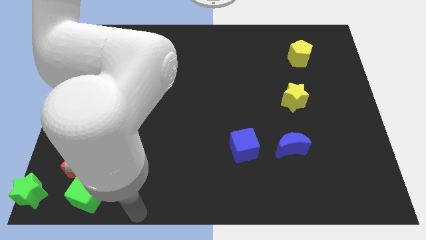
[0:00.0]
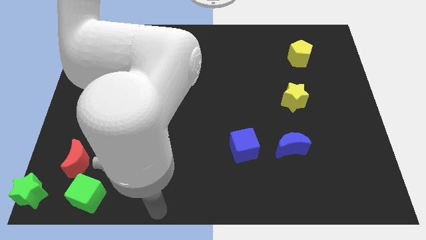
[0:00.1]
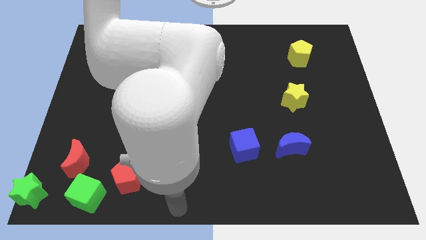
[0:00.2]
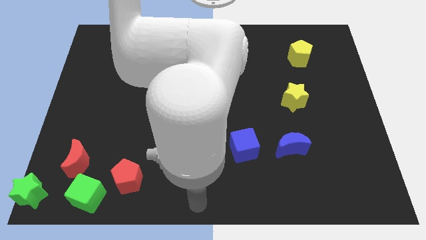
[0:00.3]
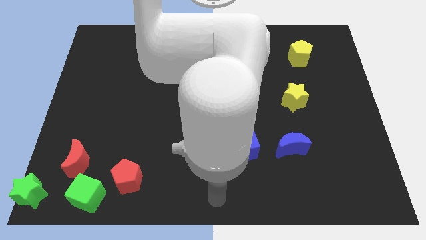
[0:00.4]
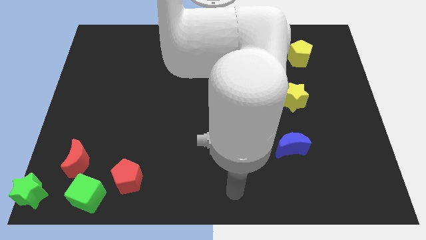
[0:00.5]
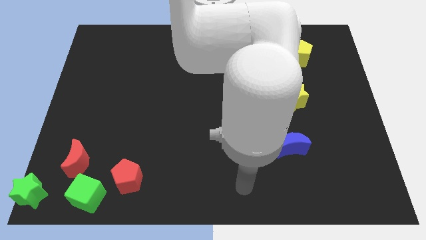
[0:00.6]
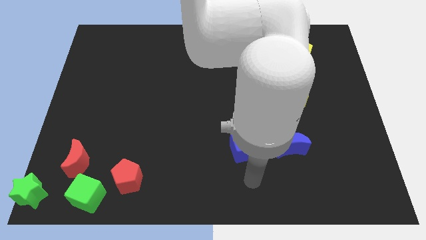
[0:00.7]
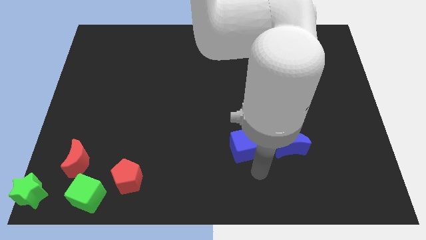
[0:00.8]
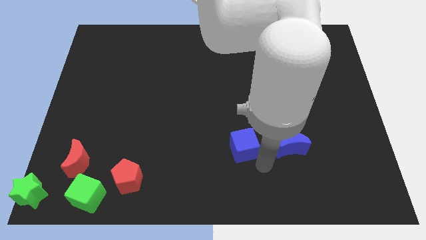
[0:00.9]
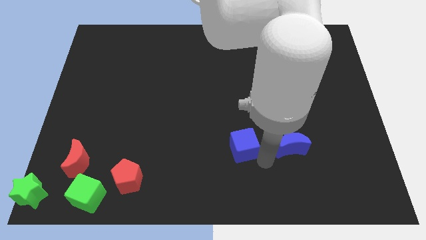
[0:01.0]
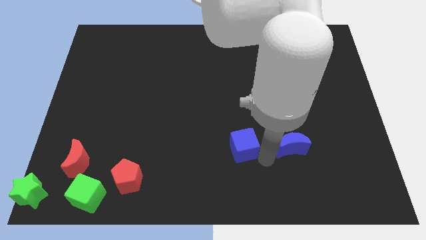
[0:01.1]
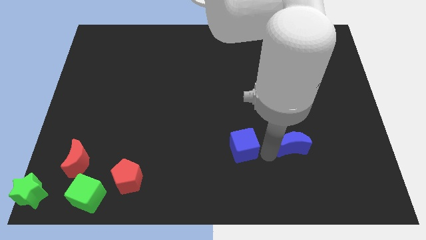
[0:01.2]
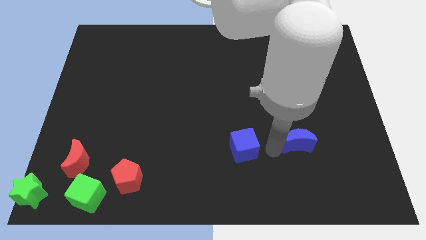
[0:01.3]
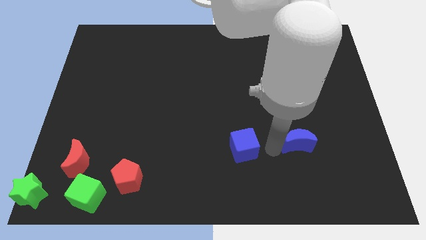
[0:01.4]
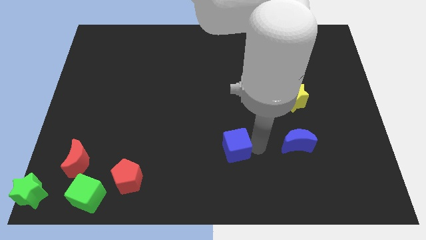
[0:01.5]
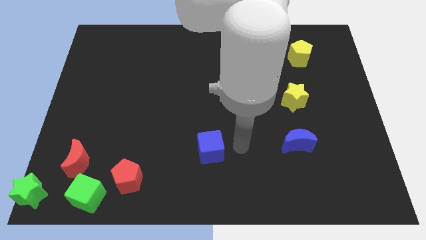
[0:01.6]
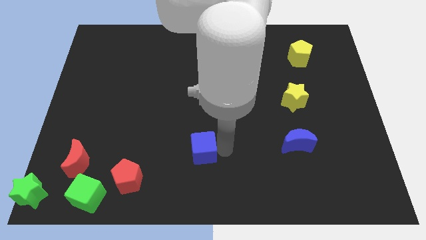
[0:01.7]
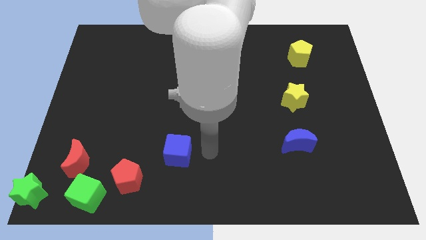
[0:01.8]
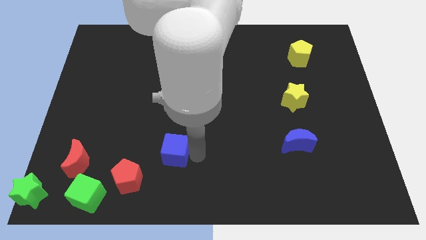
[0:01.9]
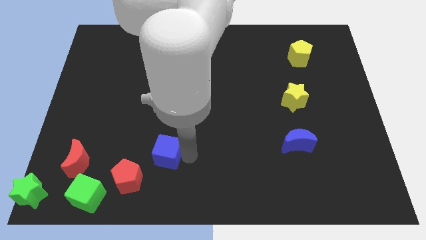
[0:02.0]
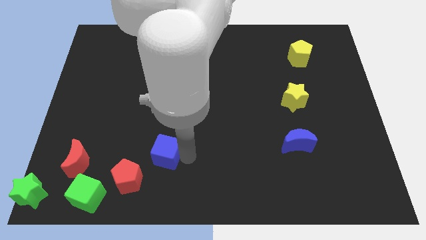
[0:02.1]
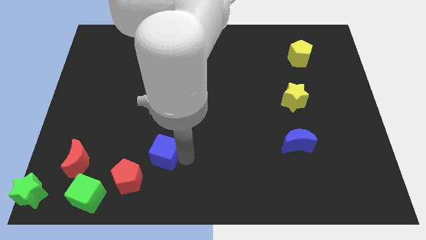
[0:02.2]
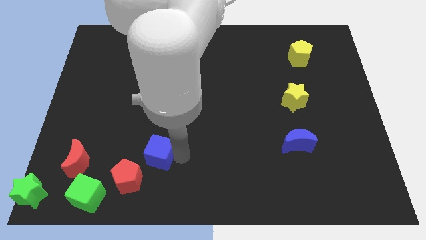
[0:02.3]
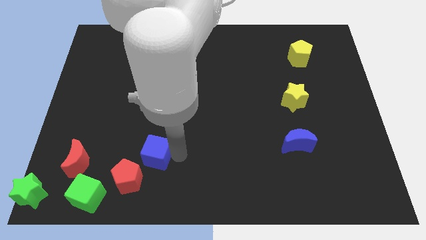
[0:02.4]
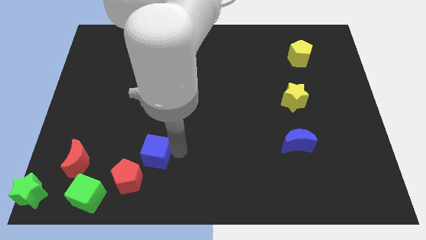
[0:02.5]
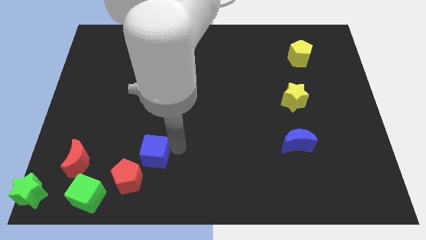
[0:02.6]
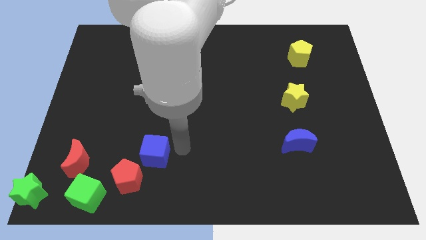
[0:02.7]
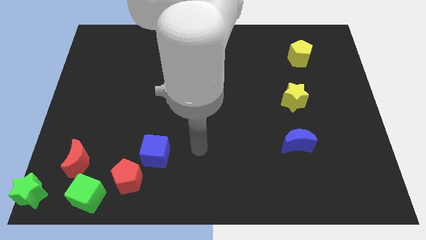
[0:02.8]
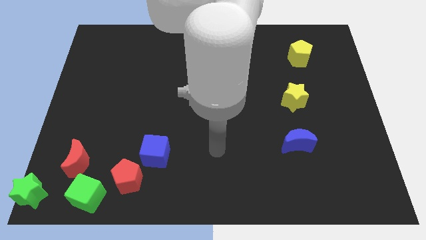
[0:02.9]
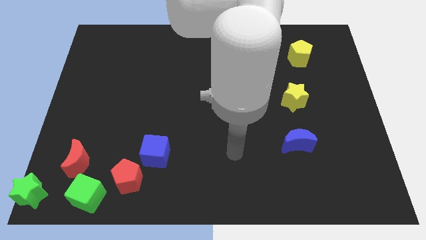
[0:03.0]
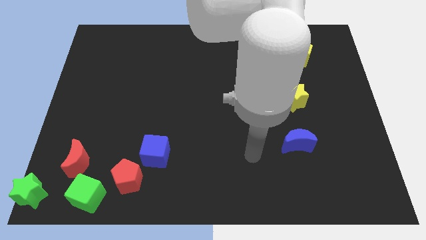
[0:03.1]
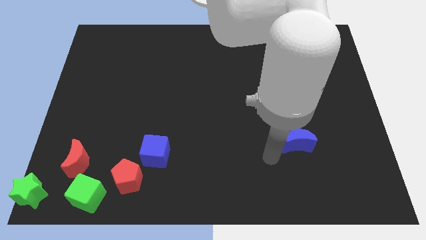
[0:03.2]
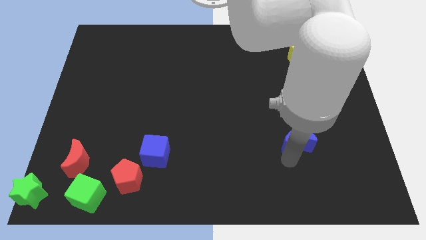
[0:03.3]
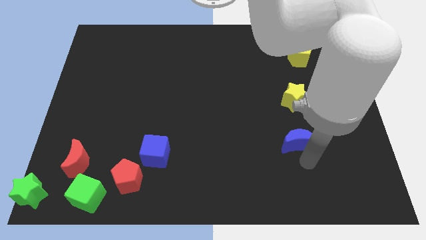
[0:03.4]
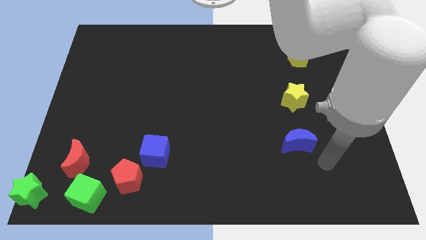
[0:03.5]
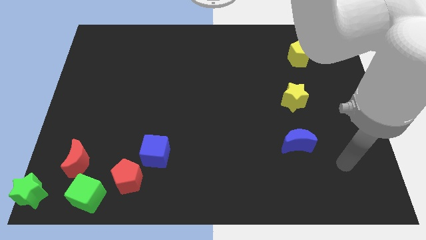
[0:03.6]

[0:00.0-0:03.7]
push the blue cube towards the red pentagon

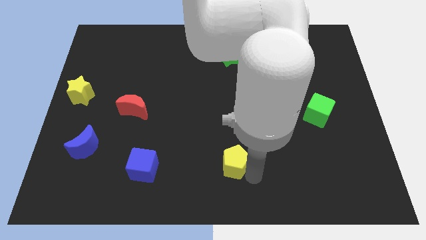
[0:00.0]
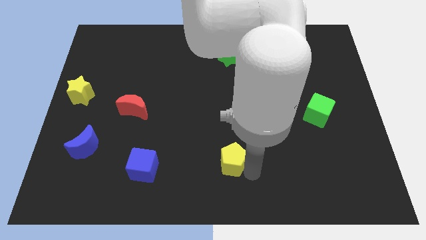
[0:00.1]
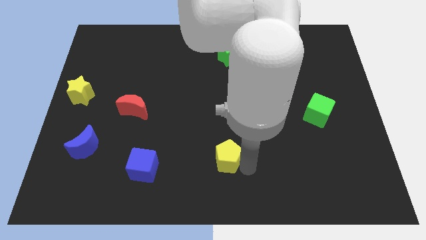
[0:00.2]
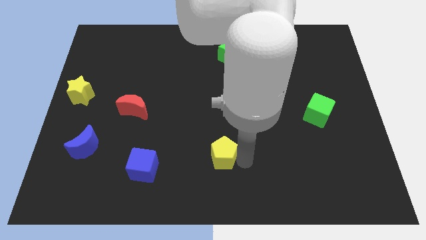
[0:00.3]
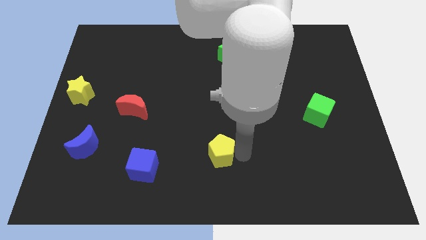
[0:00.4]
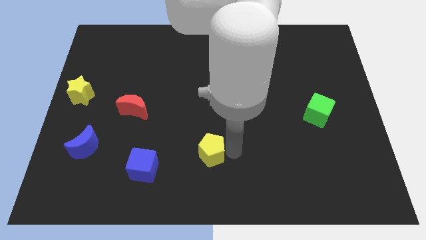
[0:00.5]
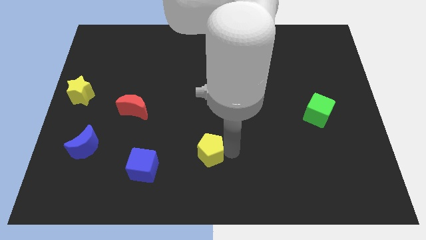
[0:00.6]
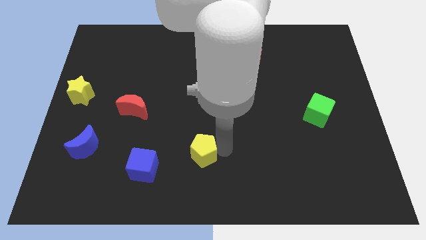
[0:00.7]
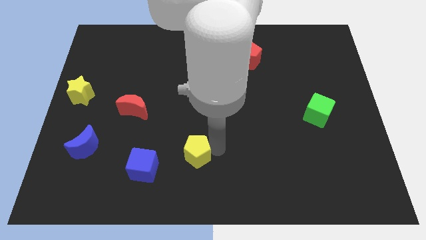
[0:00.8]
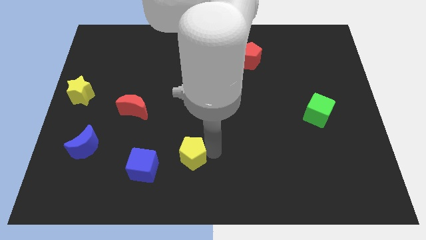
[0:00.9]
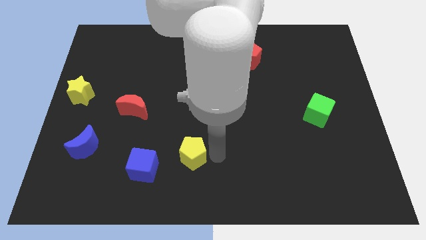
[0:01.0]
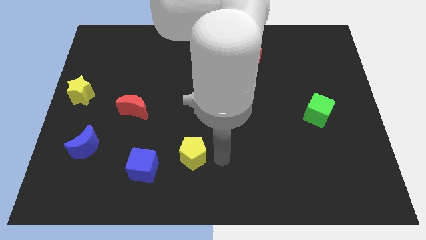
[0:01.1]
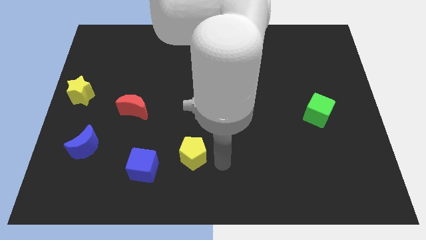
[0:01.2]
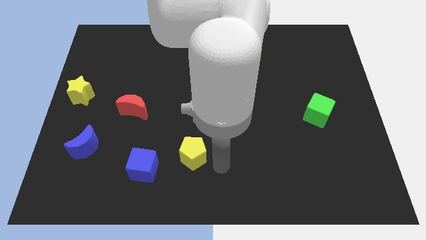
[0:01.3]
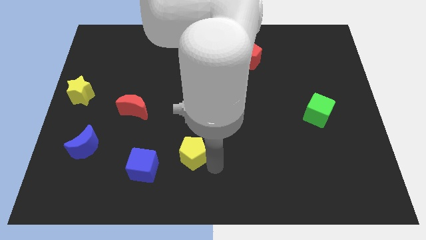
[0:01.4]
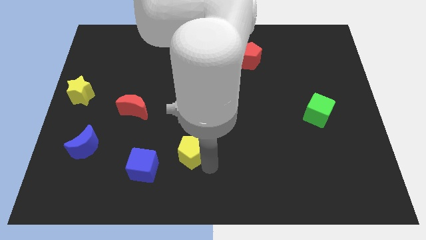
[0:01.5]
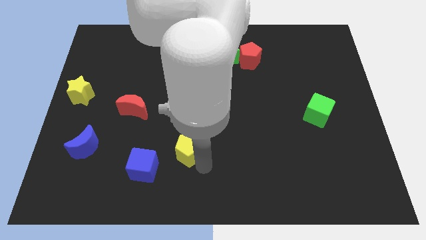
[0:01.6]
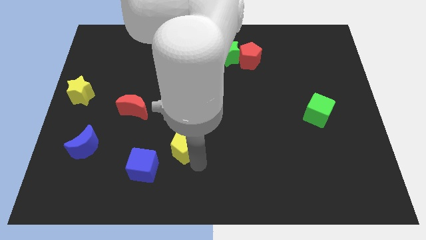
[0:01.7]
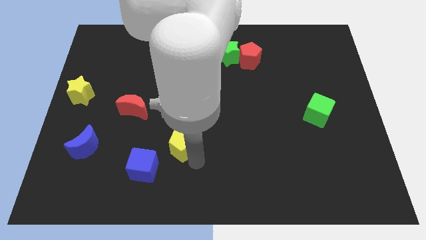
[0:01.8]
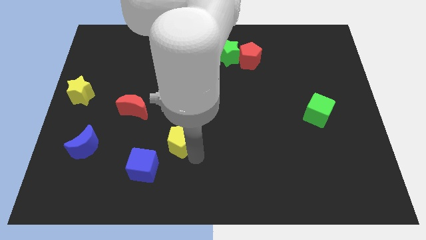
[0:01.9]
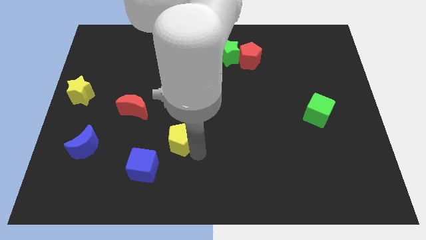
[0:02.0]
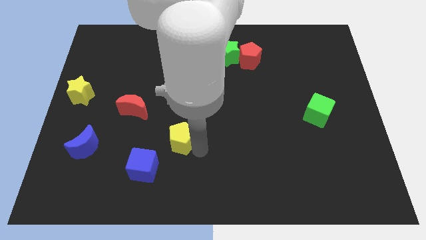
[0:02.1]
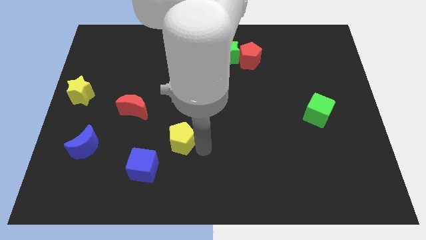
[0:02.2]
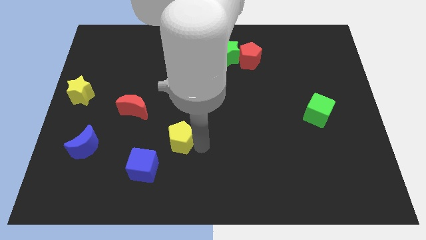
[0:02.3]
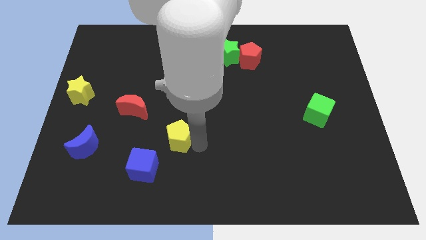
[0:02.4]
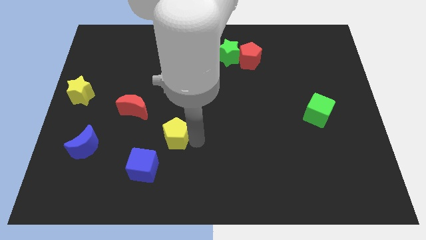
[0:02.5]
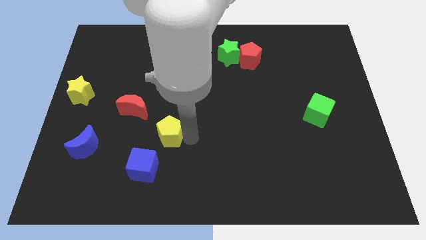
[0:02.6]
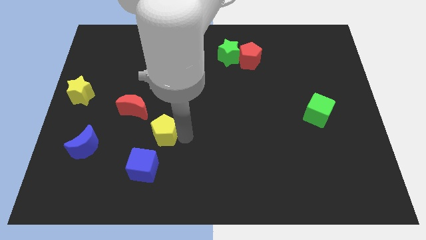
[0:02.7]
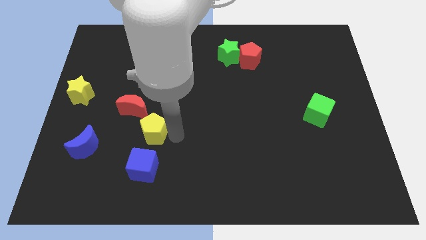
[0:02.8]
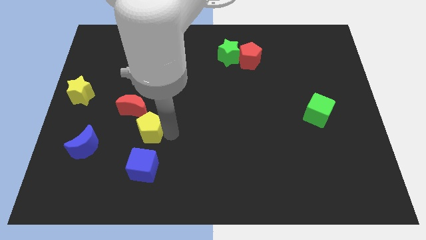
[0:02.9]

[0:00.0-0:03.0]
place the yellow pentagon above the blue cube

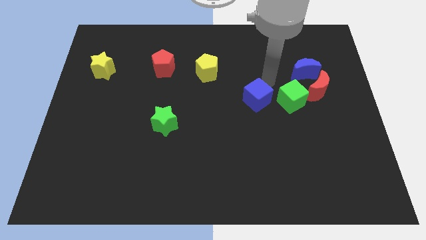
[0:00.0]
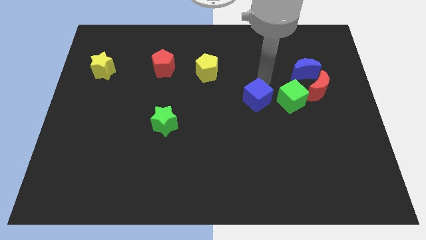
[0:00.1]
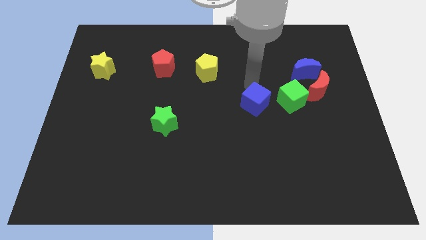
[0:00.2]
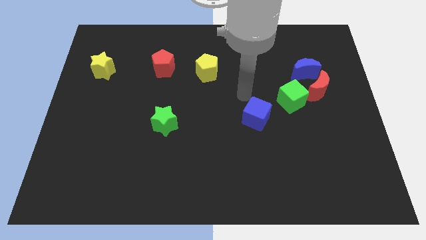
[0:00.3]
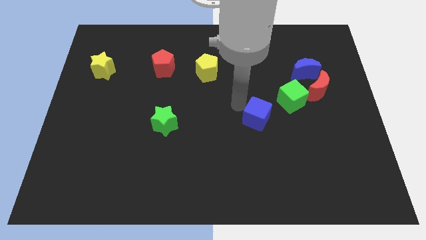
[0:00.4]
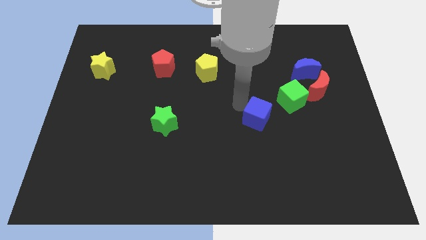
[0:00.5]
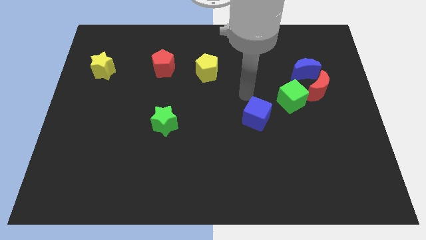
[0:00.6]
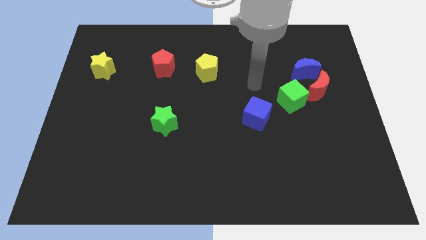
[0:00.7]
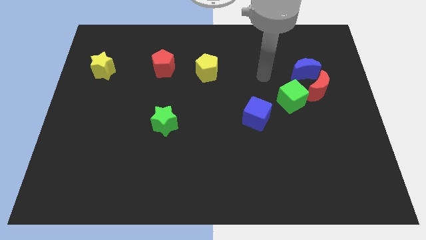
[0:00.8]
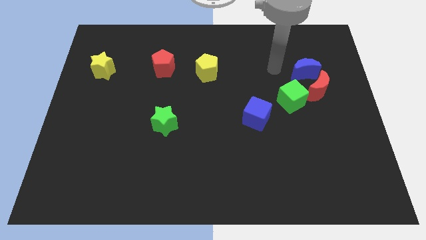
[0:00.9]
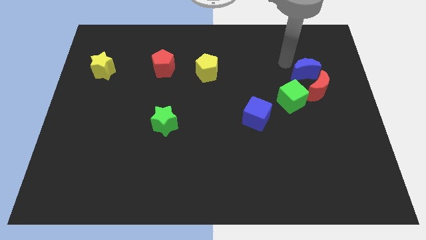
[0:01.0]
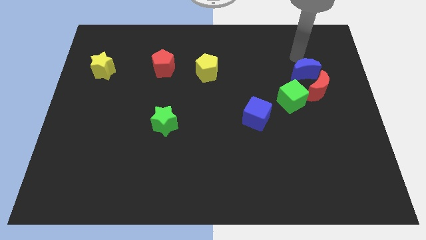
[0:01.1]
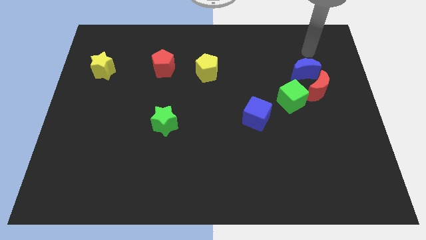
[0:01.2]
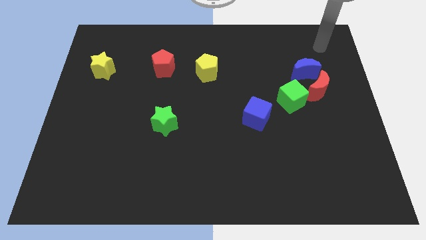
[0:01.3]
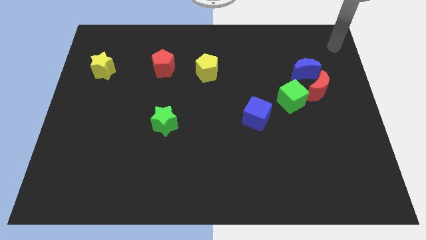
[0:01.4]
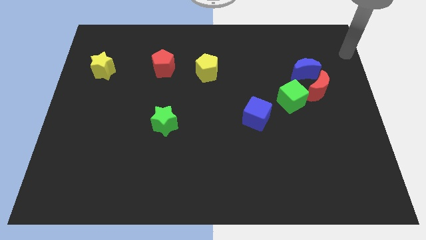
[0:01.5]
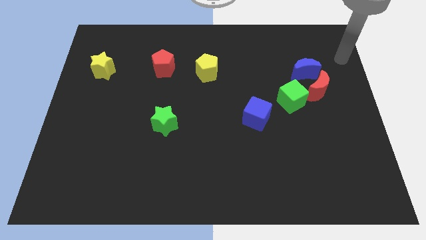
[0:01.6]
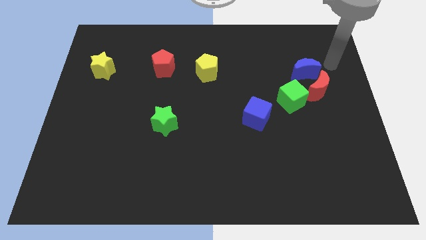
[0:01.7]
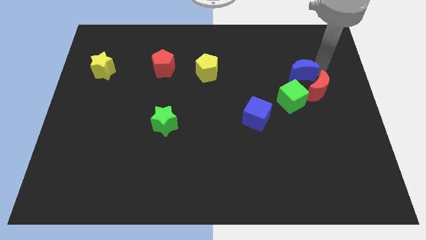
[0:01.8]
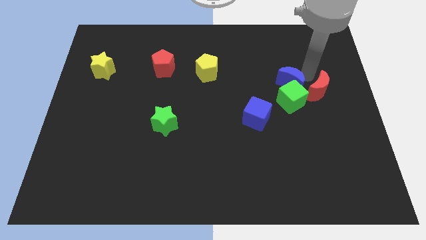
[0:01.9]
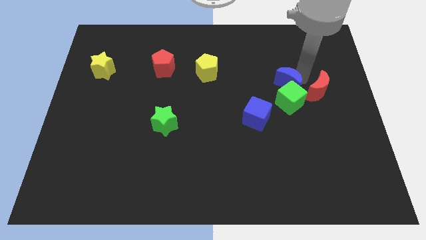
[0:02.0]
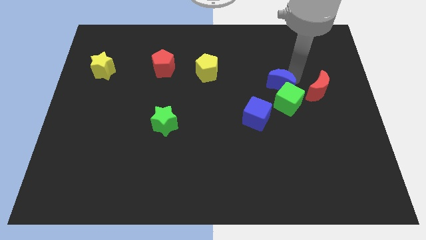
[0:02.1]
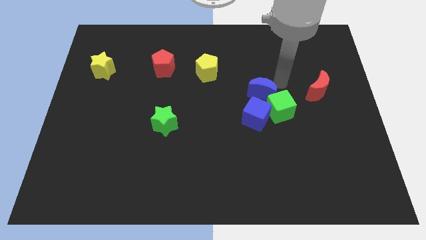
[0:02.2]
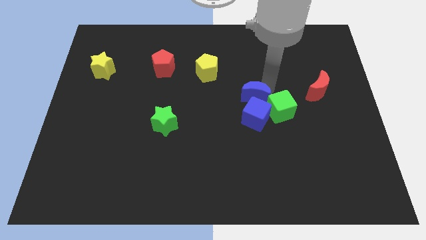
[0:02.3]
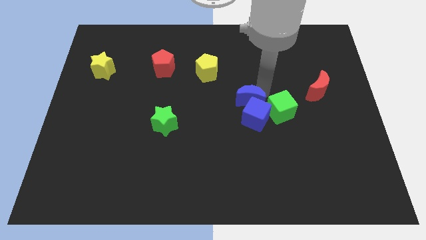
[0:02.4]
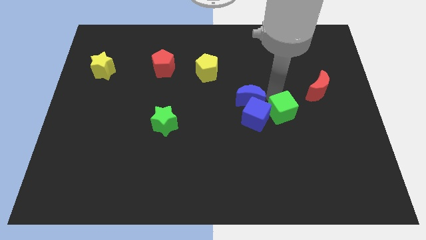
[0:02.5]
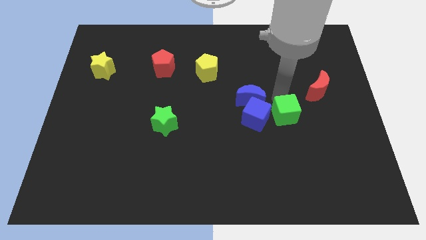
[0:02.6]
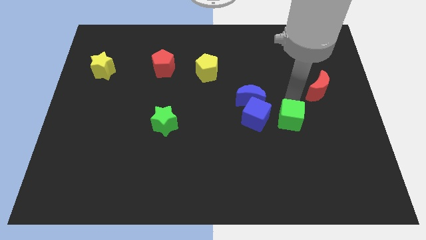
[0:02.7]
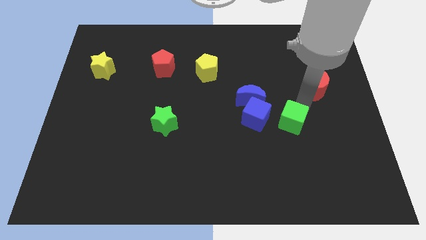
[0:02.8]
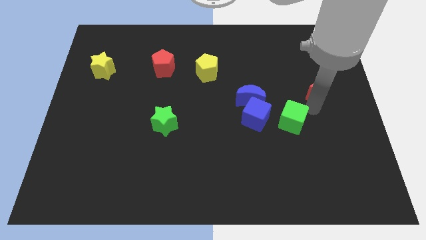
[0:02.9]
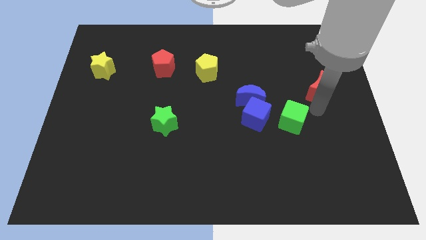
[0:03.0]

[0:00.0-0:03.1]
move blue moon blue cube green cube to the center of the board
